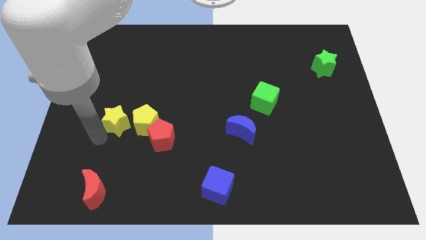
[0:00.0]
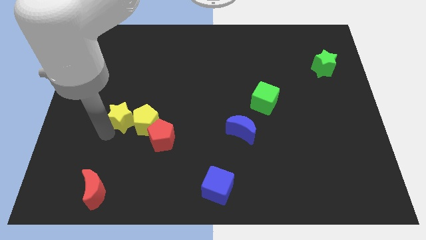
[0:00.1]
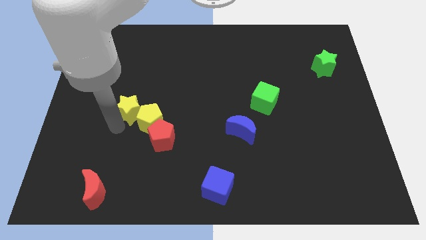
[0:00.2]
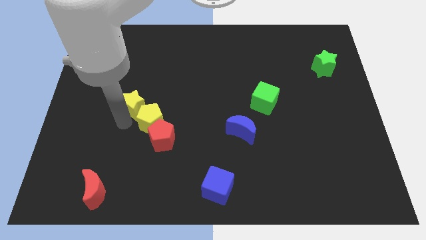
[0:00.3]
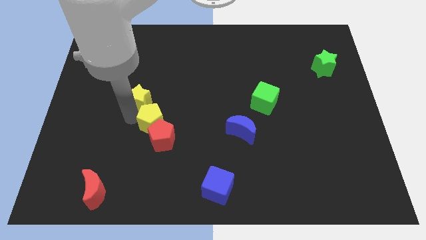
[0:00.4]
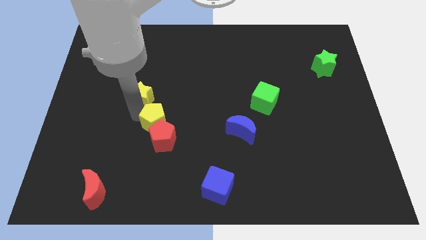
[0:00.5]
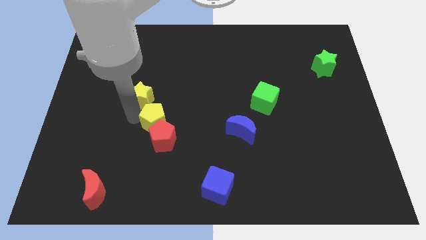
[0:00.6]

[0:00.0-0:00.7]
slightly move the yellow pentagon using yellow star

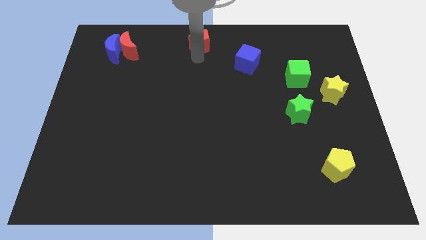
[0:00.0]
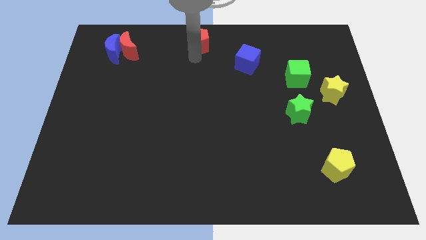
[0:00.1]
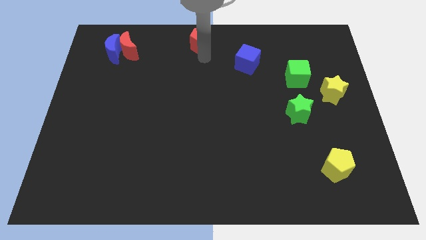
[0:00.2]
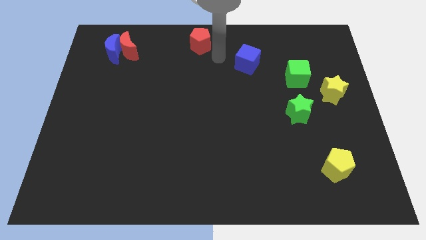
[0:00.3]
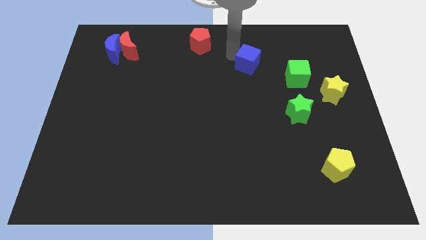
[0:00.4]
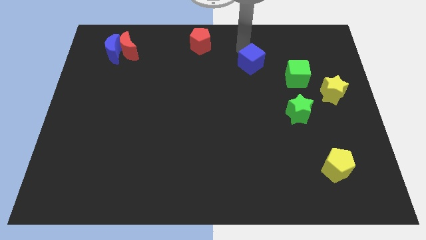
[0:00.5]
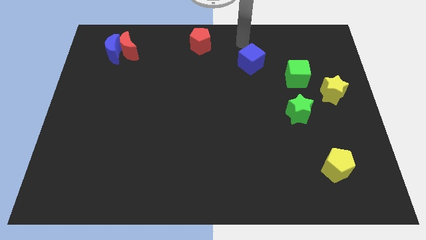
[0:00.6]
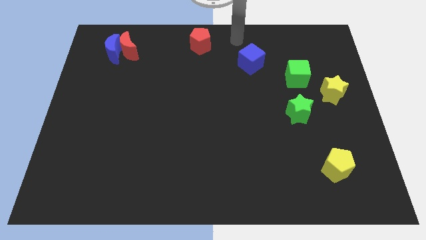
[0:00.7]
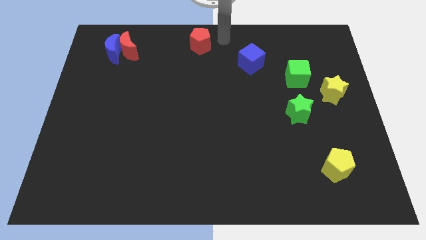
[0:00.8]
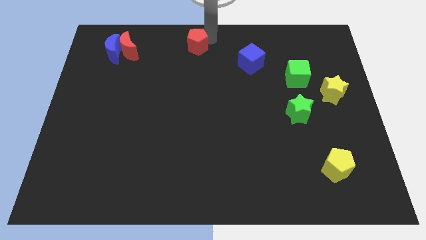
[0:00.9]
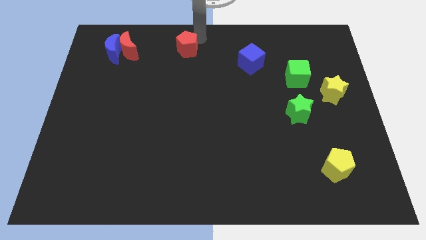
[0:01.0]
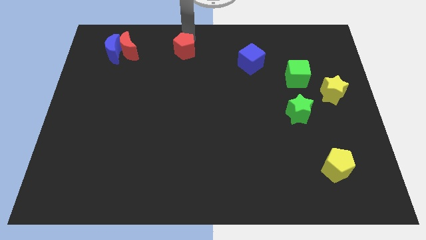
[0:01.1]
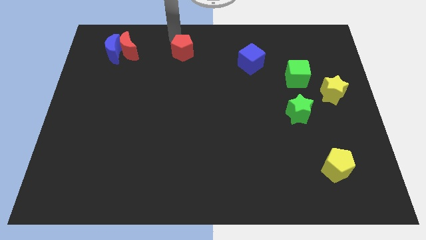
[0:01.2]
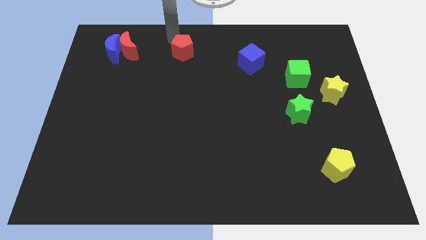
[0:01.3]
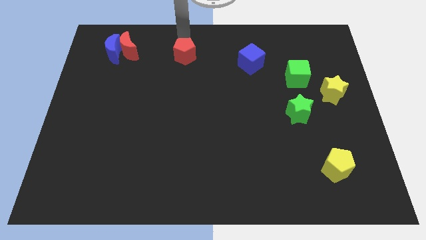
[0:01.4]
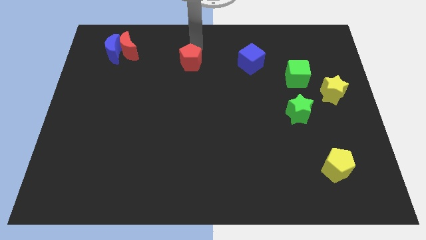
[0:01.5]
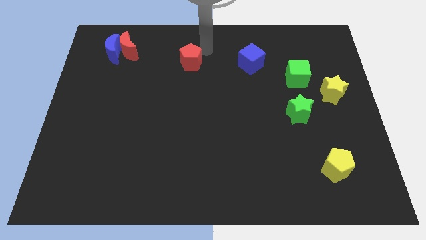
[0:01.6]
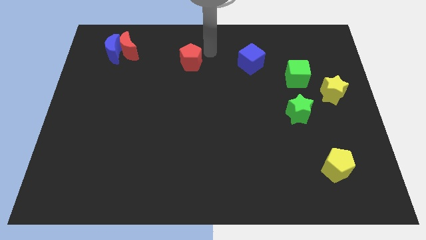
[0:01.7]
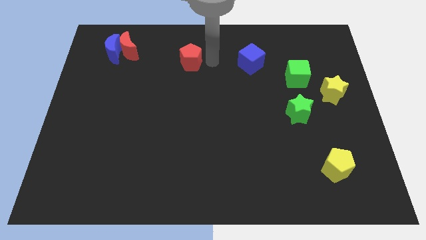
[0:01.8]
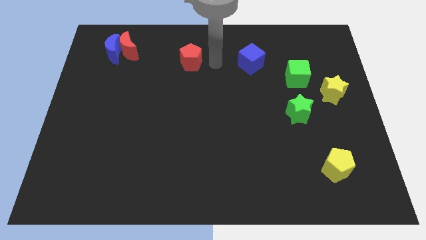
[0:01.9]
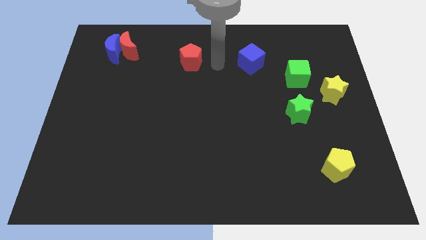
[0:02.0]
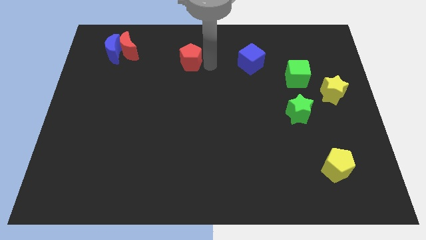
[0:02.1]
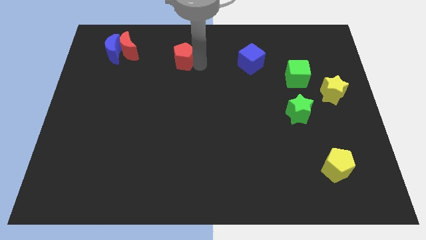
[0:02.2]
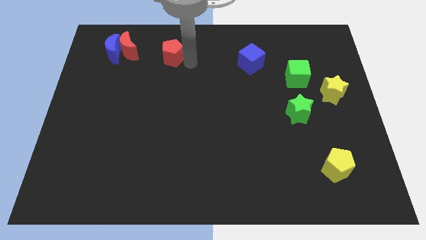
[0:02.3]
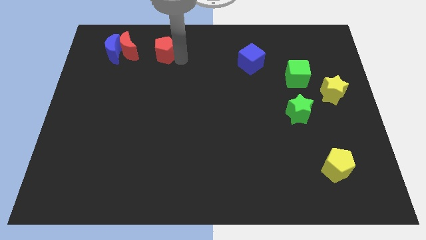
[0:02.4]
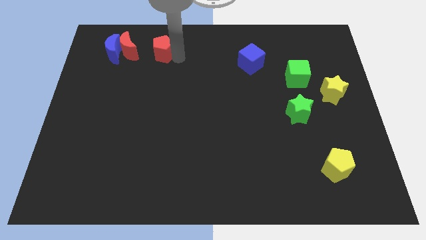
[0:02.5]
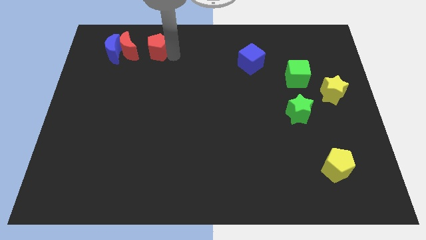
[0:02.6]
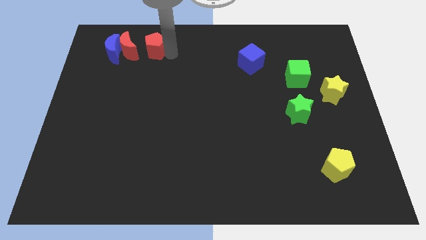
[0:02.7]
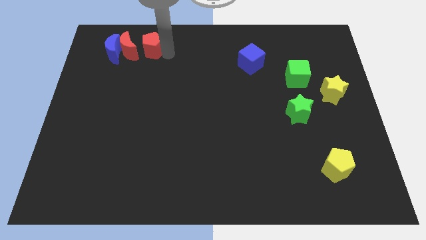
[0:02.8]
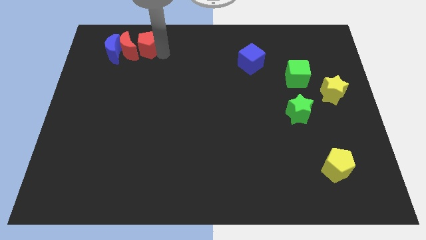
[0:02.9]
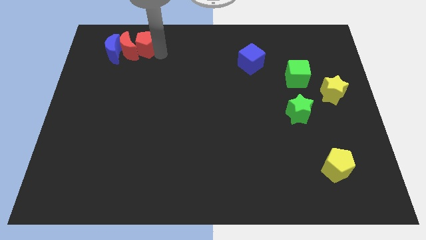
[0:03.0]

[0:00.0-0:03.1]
add red pentagon into red moon

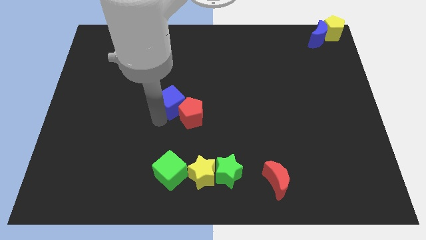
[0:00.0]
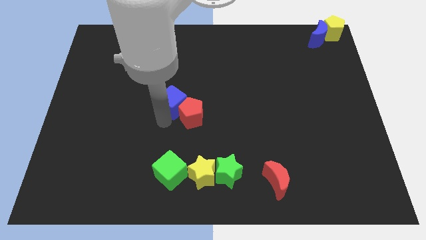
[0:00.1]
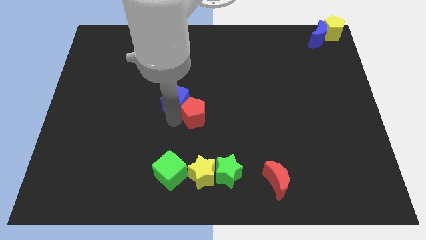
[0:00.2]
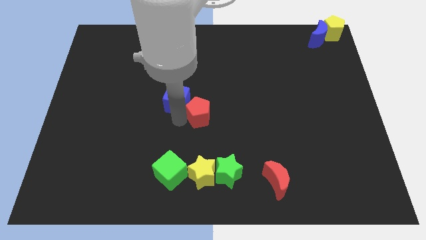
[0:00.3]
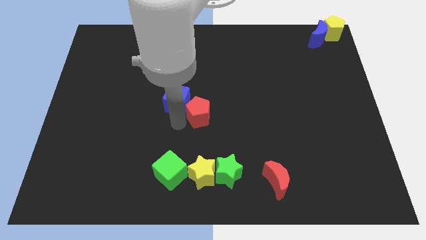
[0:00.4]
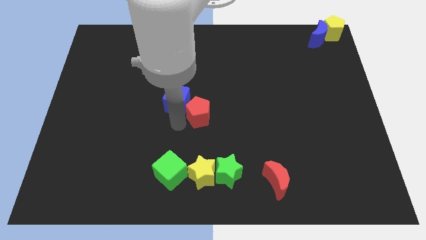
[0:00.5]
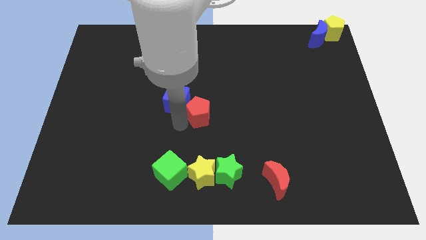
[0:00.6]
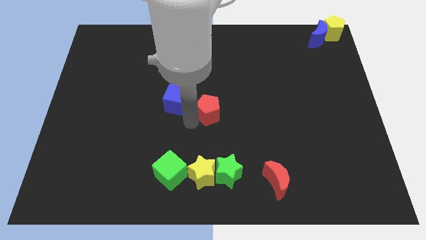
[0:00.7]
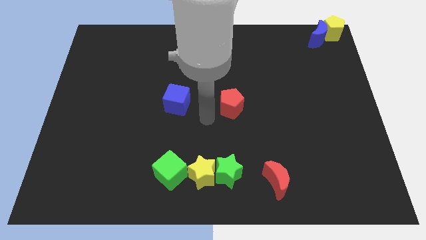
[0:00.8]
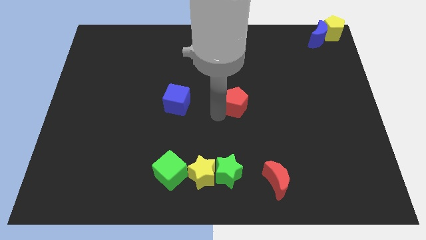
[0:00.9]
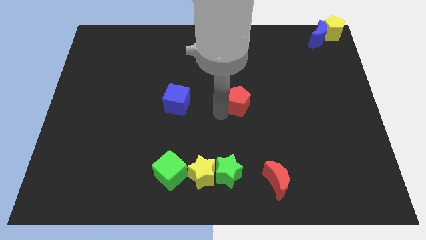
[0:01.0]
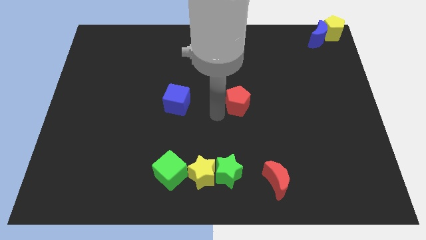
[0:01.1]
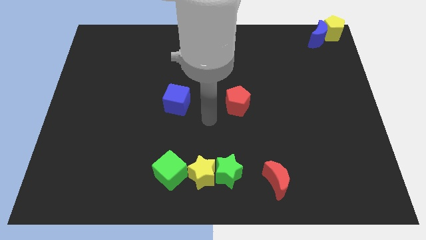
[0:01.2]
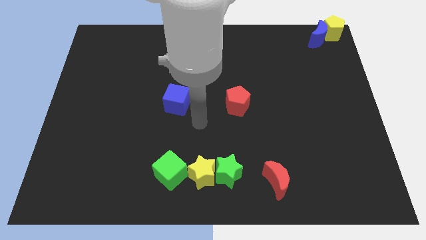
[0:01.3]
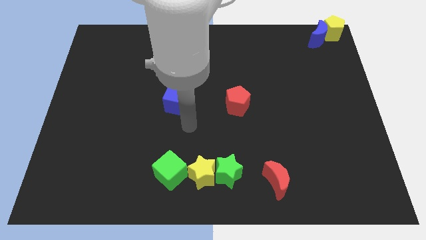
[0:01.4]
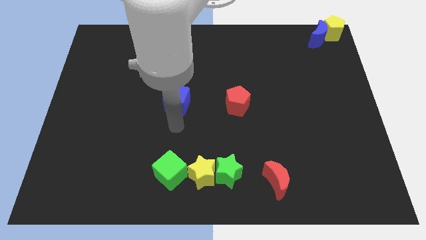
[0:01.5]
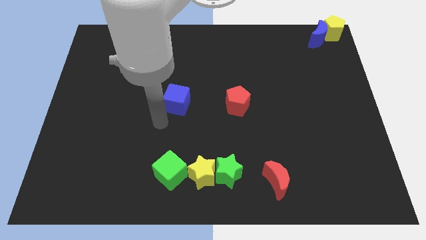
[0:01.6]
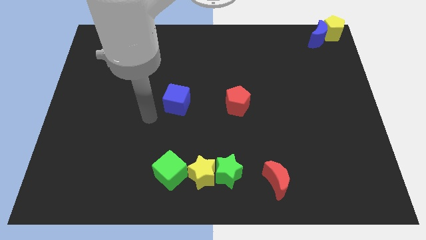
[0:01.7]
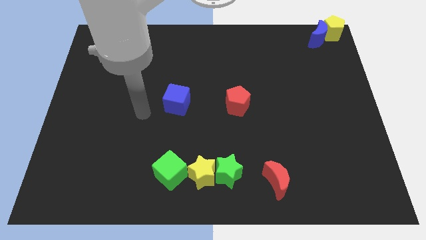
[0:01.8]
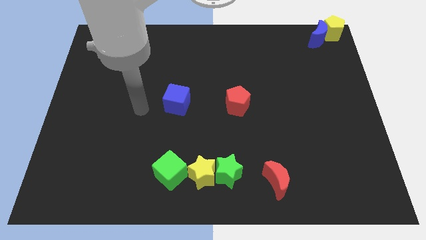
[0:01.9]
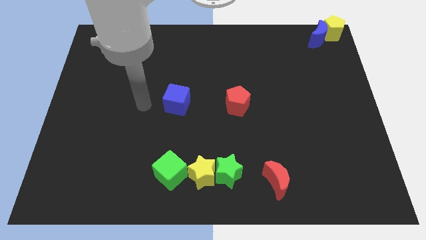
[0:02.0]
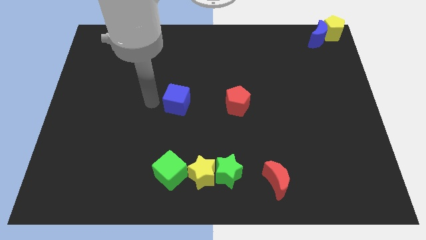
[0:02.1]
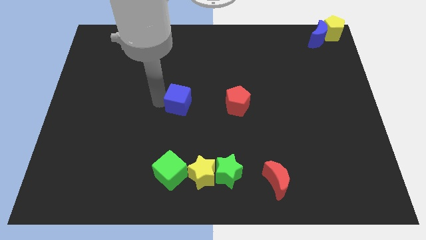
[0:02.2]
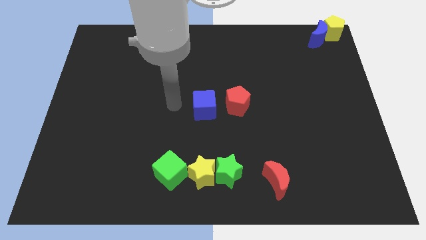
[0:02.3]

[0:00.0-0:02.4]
separate the blue cube and red pentagon

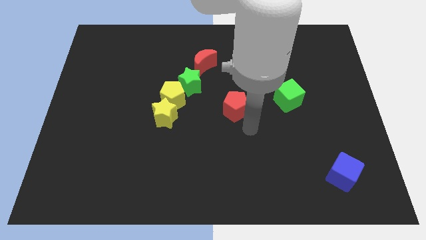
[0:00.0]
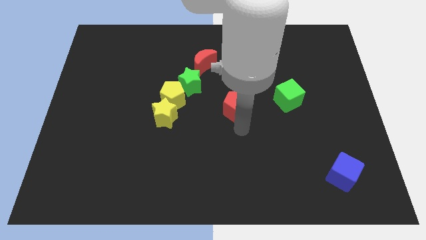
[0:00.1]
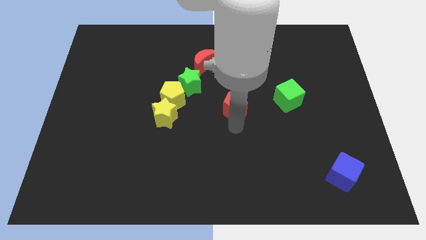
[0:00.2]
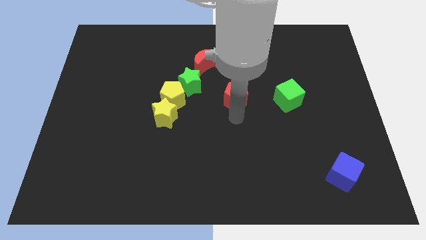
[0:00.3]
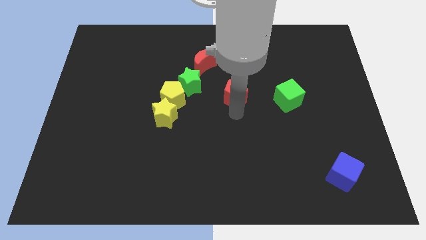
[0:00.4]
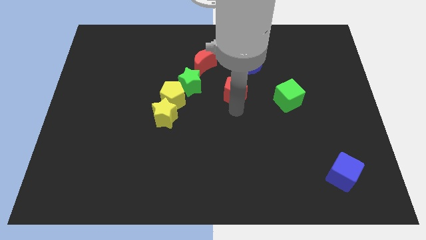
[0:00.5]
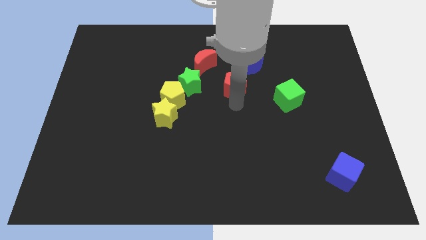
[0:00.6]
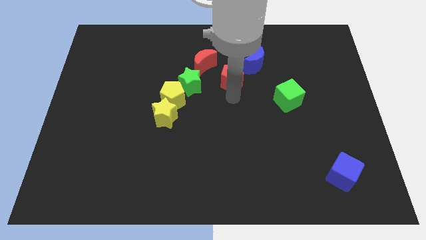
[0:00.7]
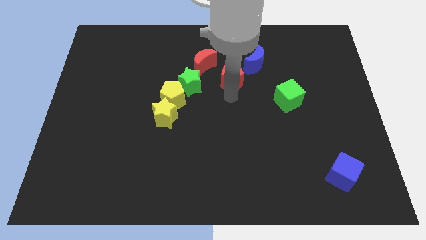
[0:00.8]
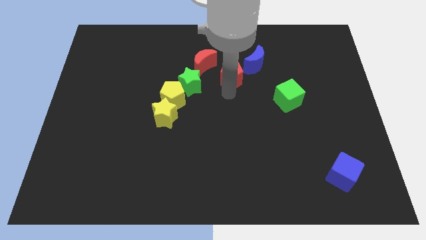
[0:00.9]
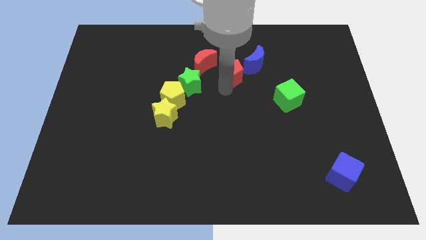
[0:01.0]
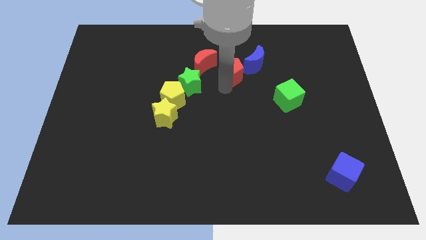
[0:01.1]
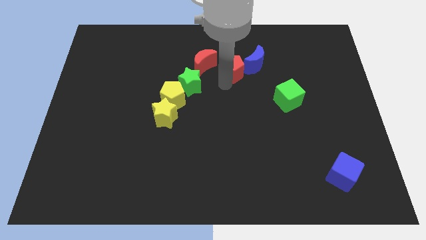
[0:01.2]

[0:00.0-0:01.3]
place red pentagon to the bottom left of blue crescent

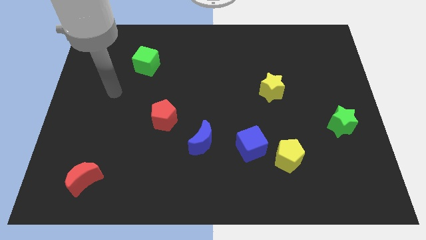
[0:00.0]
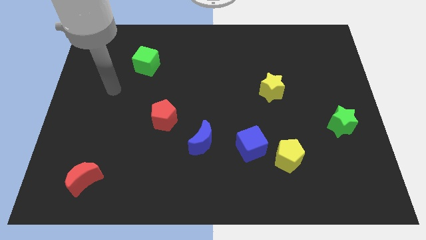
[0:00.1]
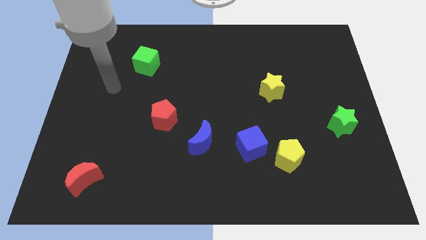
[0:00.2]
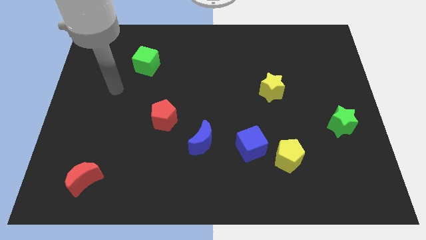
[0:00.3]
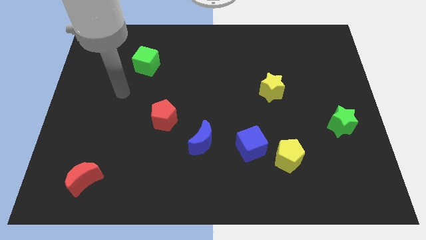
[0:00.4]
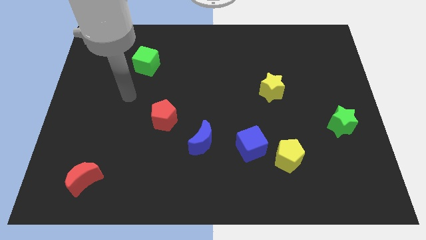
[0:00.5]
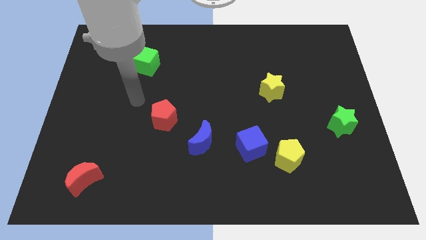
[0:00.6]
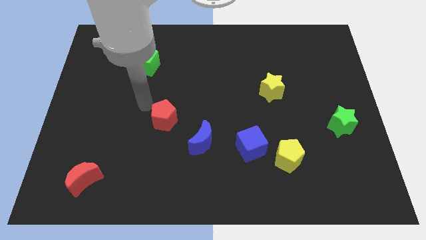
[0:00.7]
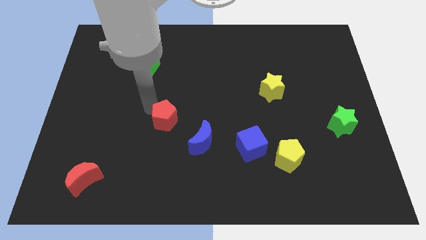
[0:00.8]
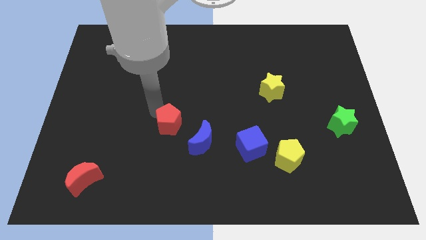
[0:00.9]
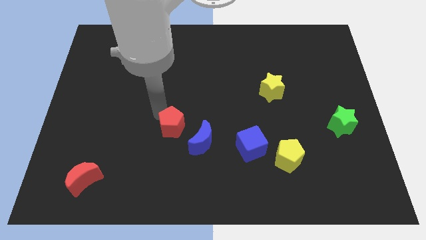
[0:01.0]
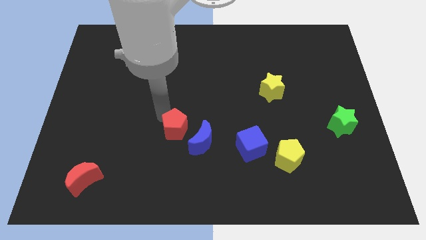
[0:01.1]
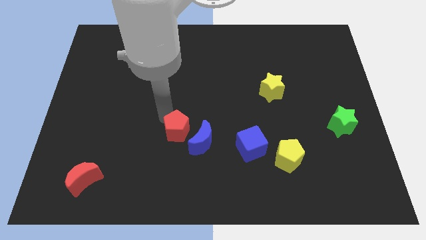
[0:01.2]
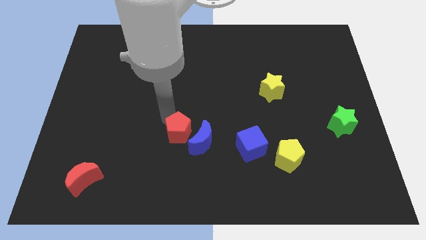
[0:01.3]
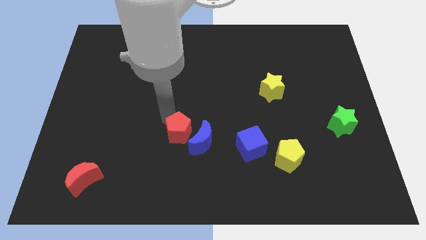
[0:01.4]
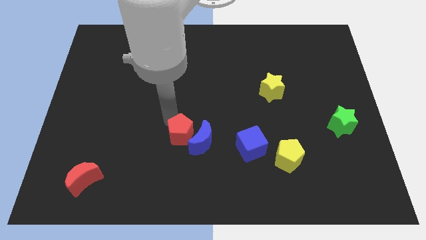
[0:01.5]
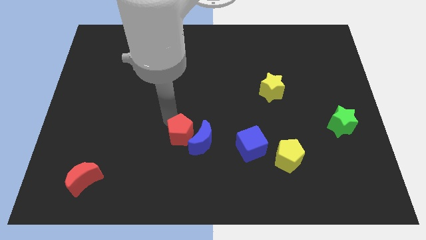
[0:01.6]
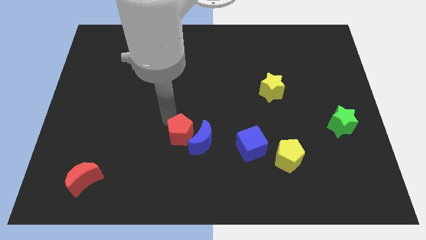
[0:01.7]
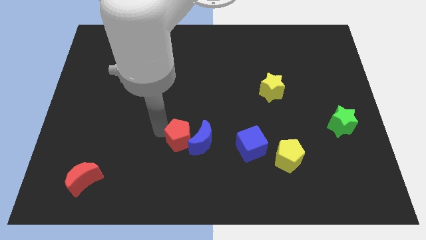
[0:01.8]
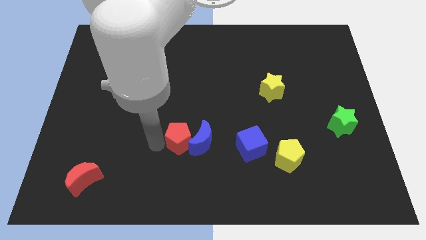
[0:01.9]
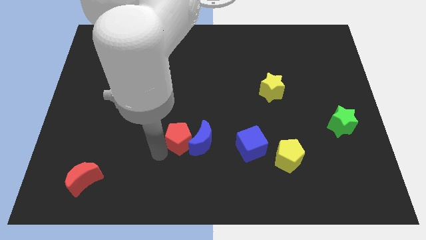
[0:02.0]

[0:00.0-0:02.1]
push red pentagon into blue moon
